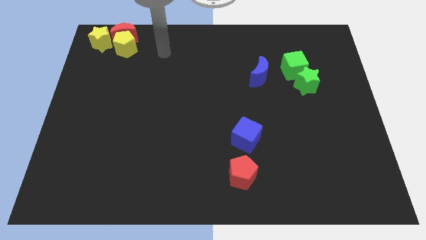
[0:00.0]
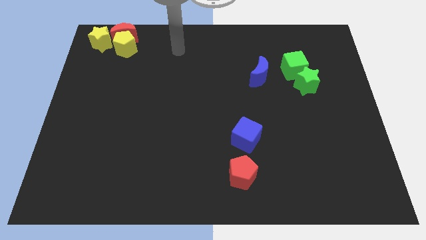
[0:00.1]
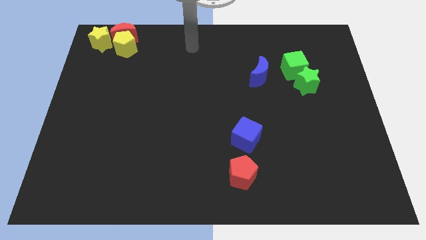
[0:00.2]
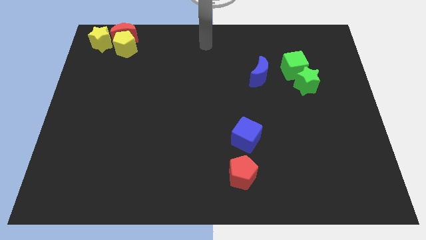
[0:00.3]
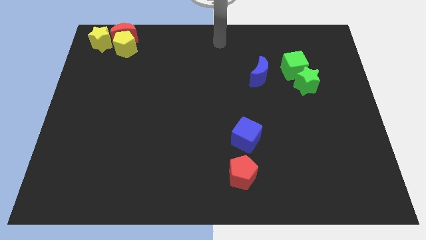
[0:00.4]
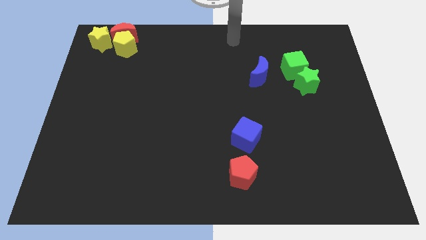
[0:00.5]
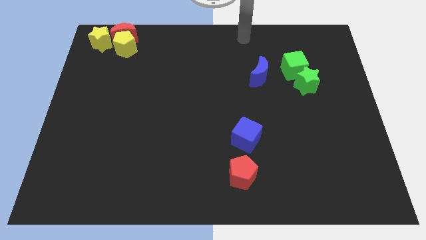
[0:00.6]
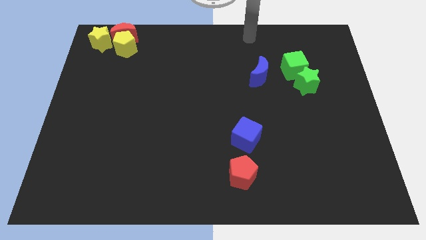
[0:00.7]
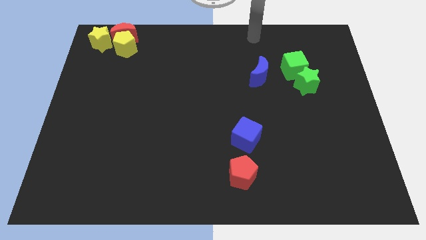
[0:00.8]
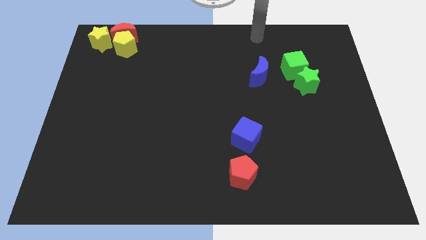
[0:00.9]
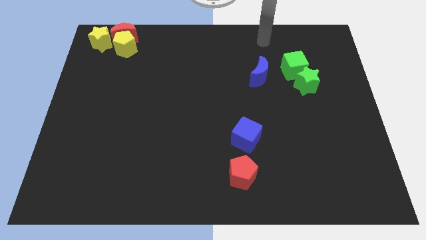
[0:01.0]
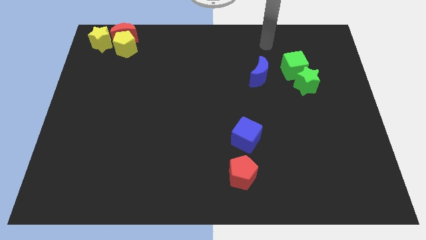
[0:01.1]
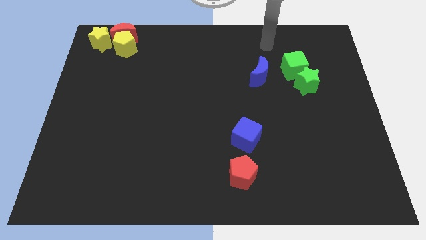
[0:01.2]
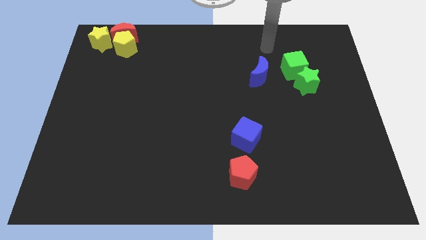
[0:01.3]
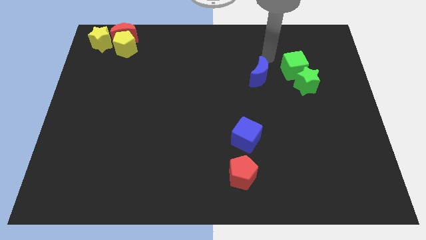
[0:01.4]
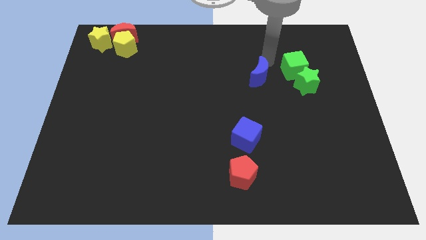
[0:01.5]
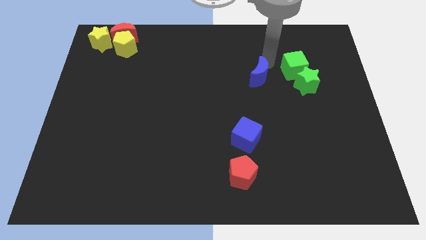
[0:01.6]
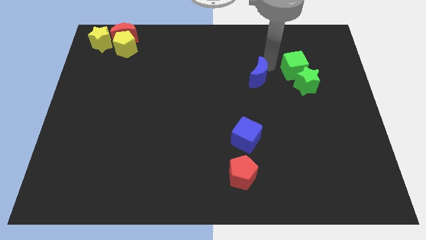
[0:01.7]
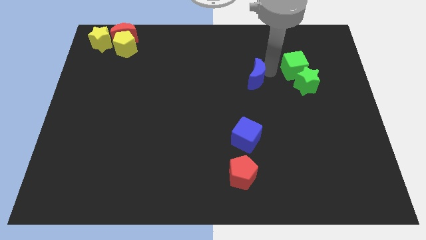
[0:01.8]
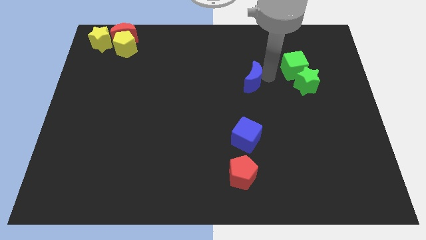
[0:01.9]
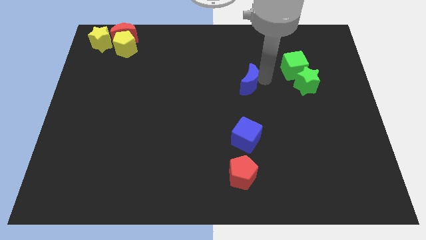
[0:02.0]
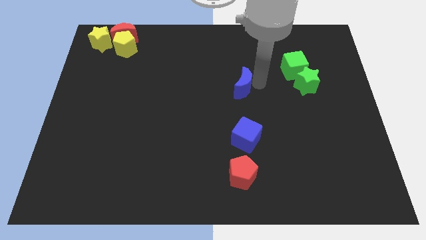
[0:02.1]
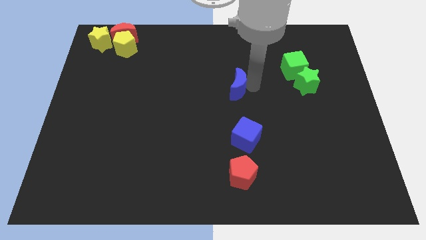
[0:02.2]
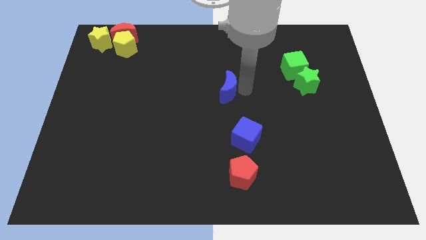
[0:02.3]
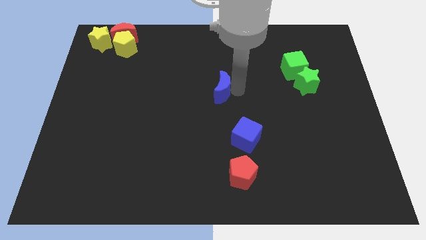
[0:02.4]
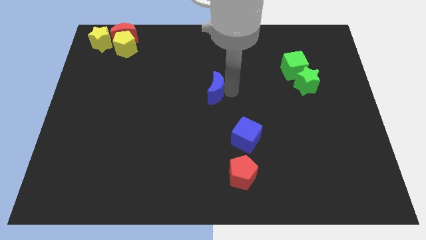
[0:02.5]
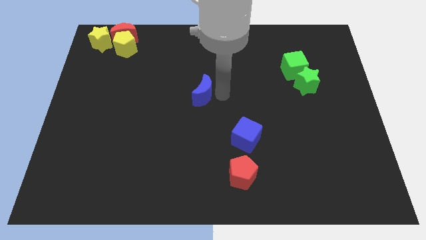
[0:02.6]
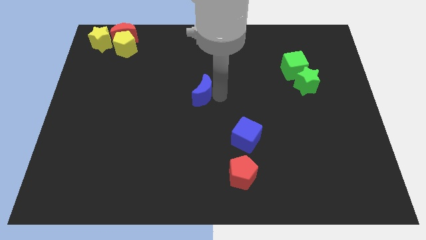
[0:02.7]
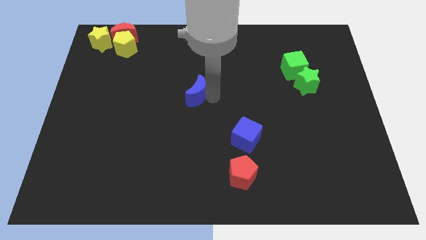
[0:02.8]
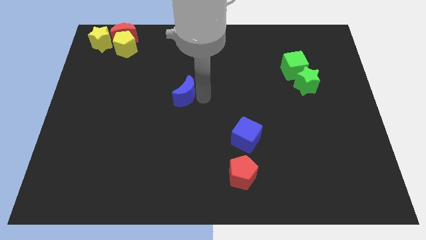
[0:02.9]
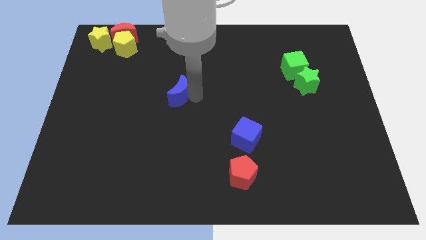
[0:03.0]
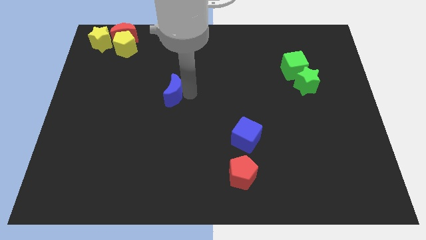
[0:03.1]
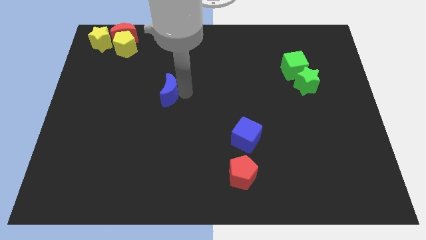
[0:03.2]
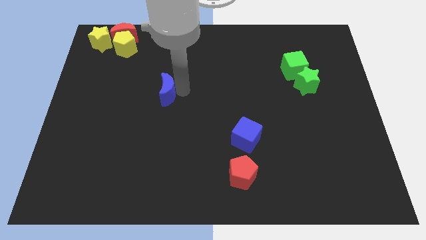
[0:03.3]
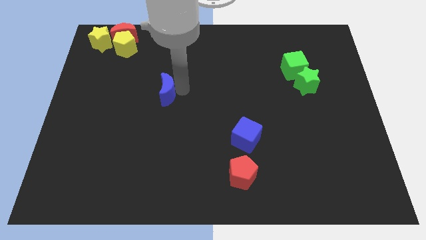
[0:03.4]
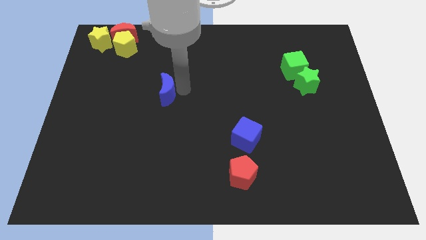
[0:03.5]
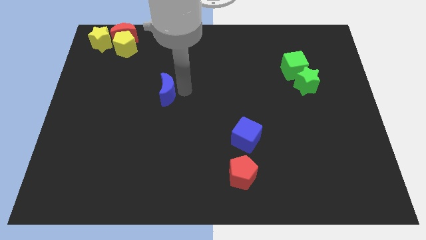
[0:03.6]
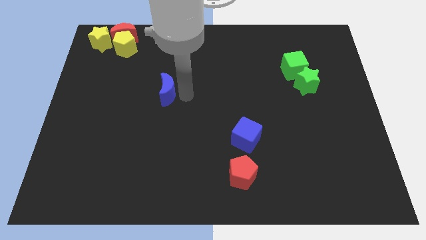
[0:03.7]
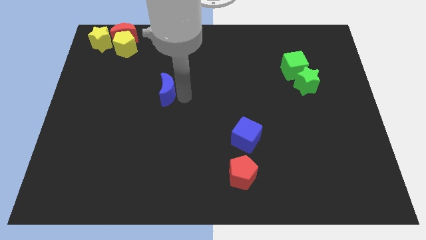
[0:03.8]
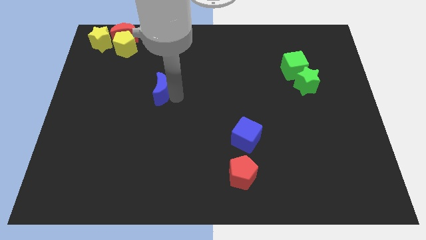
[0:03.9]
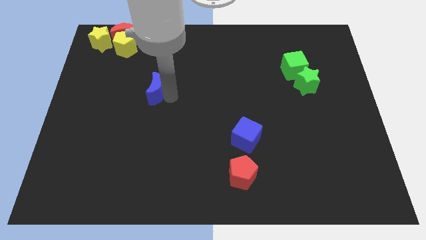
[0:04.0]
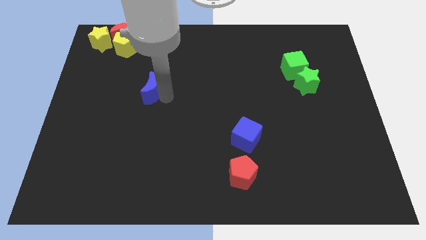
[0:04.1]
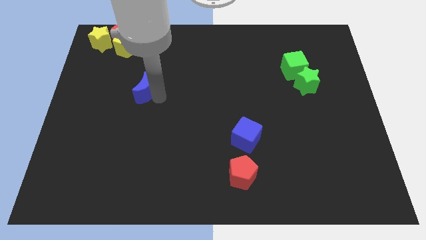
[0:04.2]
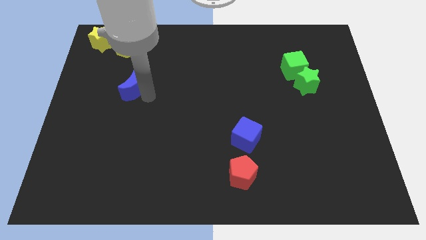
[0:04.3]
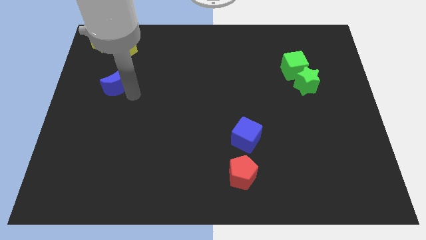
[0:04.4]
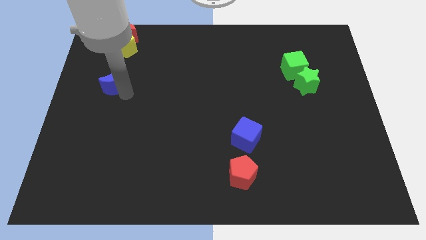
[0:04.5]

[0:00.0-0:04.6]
move the blue crescent to the left side of the table

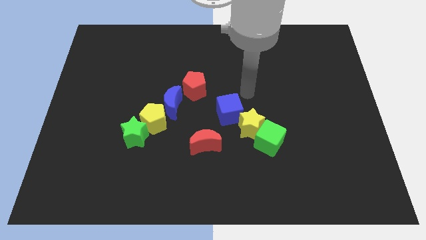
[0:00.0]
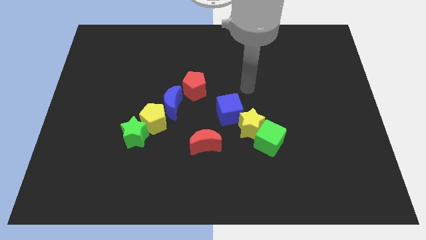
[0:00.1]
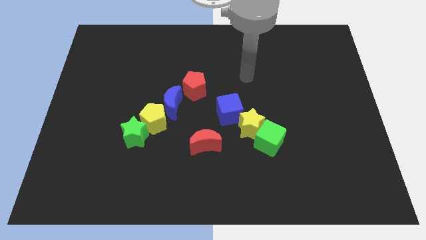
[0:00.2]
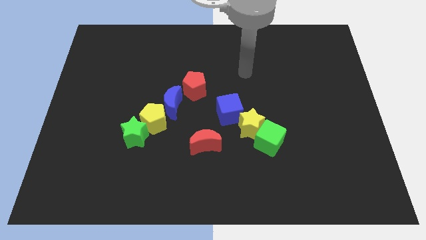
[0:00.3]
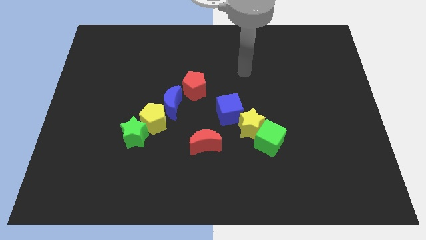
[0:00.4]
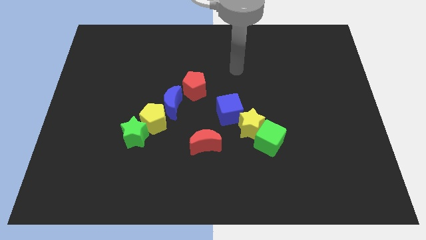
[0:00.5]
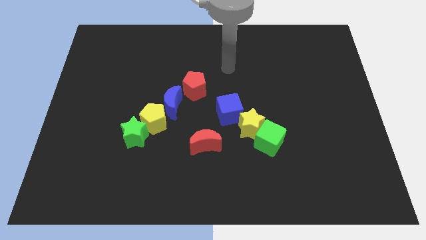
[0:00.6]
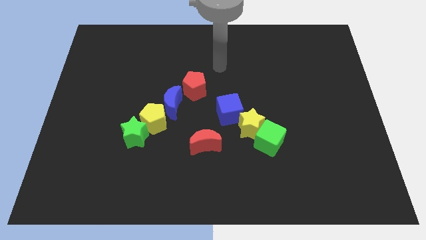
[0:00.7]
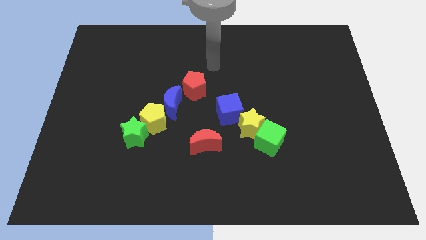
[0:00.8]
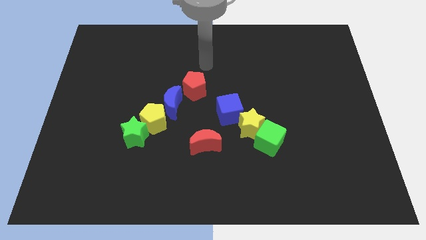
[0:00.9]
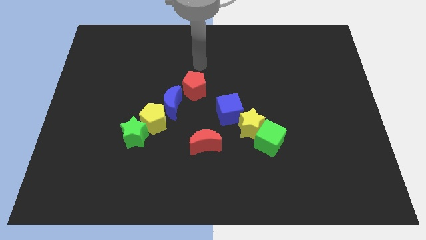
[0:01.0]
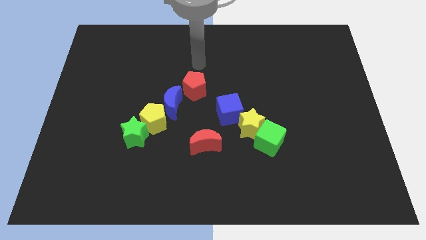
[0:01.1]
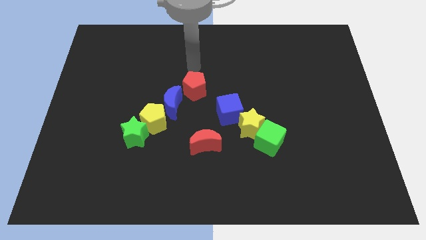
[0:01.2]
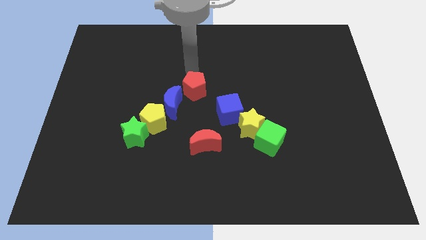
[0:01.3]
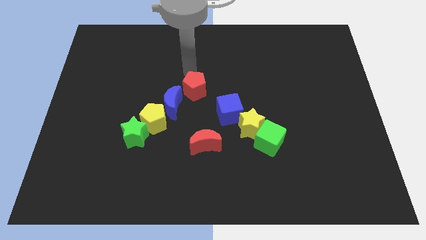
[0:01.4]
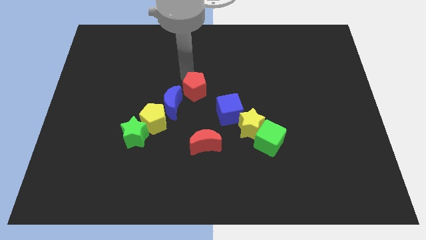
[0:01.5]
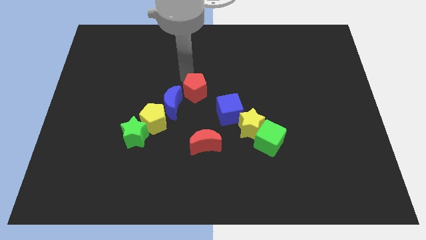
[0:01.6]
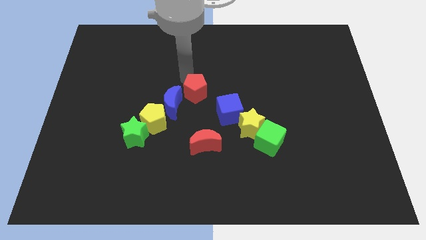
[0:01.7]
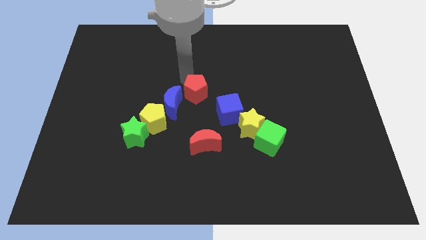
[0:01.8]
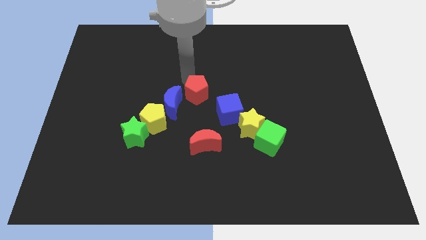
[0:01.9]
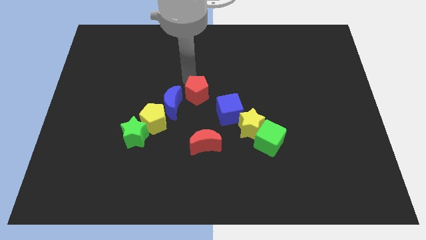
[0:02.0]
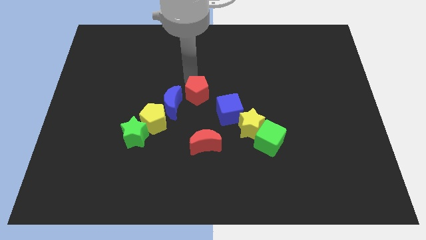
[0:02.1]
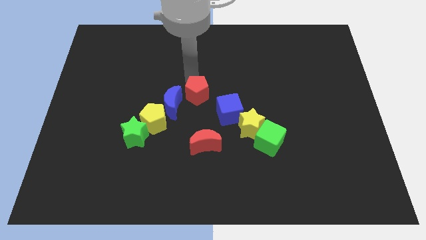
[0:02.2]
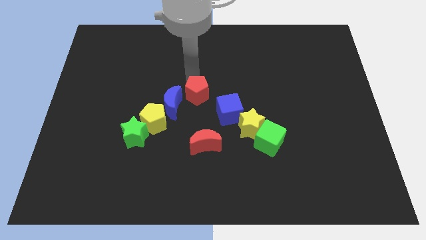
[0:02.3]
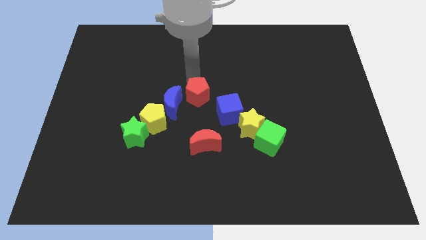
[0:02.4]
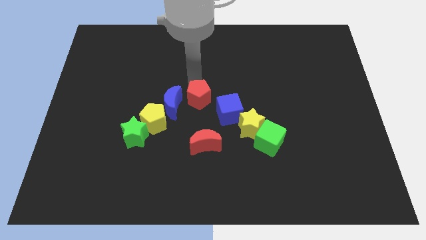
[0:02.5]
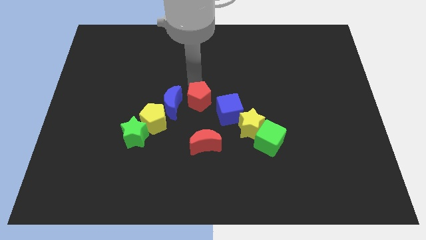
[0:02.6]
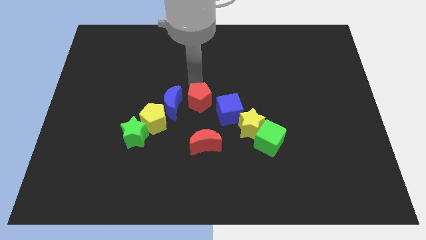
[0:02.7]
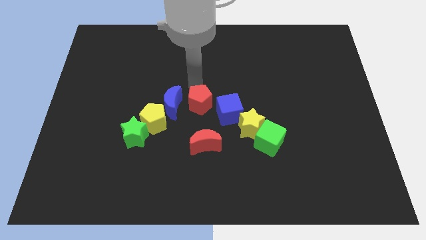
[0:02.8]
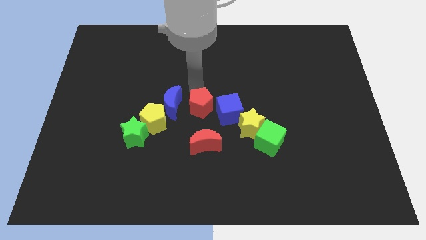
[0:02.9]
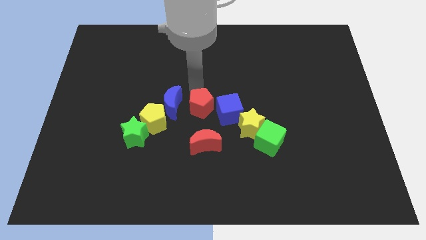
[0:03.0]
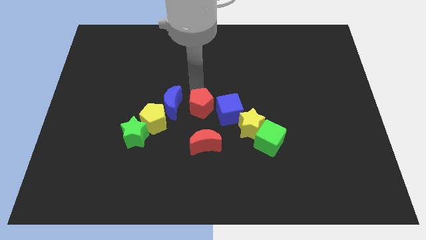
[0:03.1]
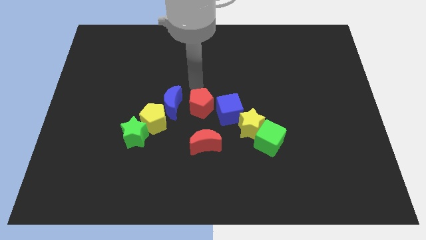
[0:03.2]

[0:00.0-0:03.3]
place the red pentagon in between the blue crescent and the blue cube

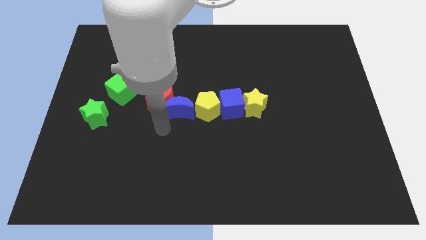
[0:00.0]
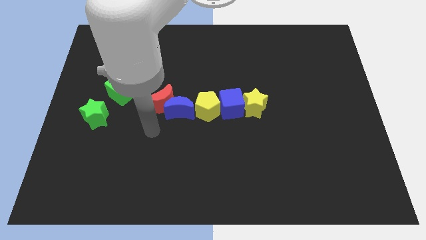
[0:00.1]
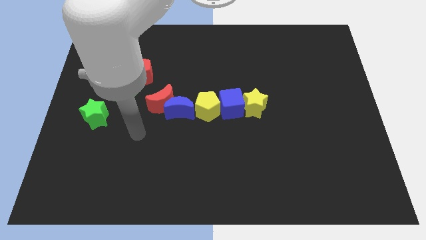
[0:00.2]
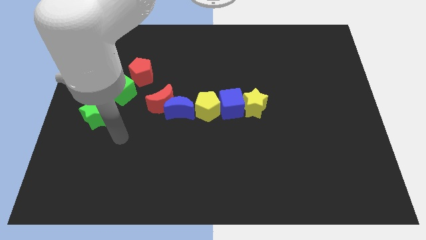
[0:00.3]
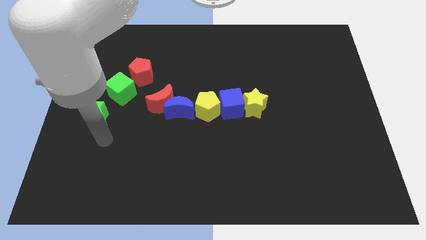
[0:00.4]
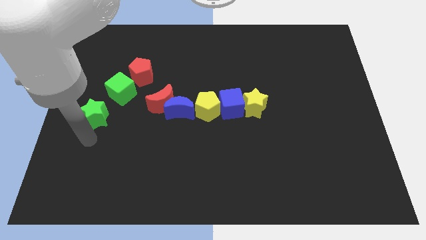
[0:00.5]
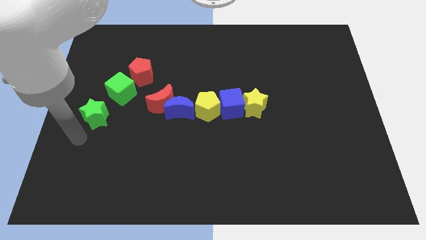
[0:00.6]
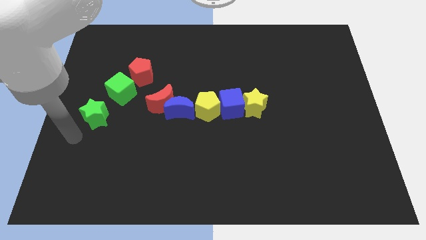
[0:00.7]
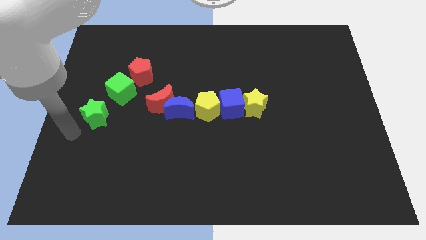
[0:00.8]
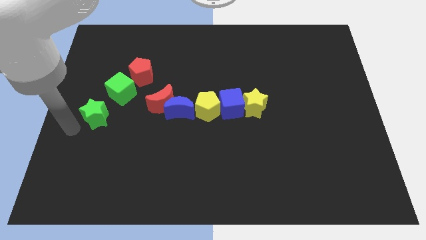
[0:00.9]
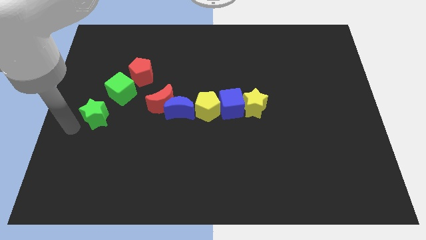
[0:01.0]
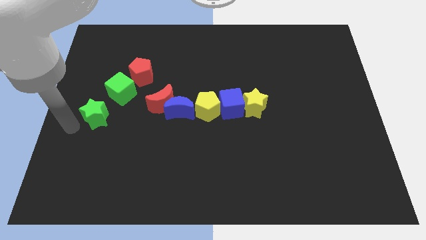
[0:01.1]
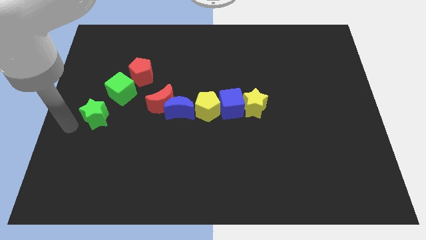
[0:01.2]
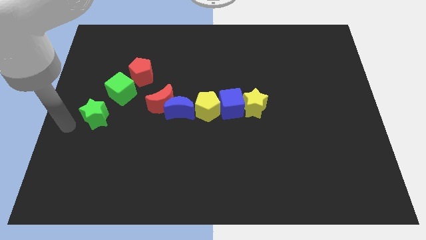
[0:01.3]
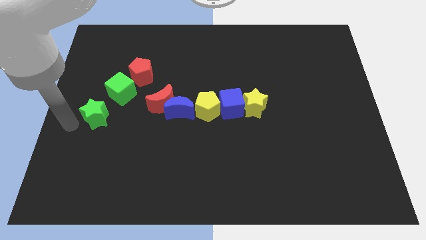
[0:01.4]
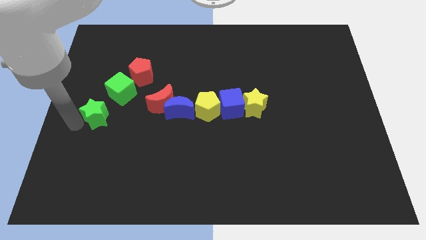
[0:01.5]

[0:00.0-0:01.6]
move your arm towards the green star
